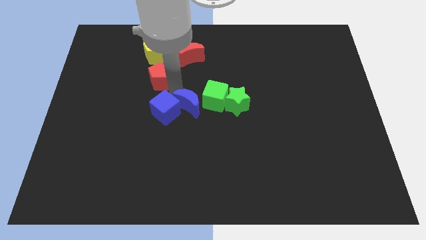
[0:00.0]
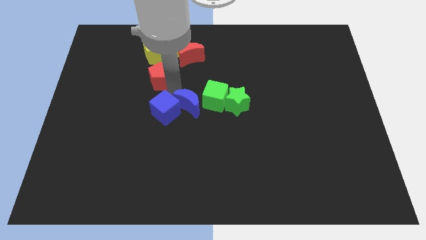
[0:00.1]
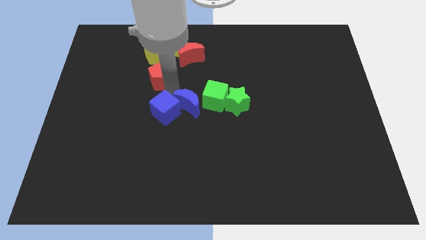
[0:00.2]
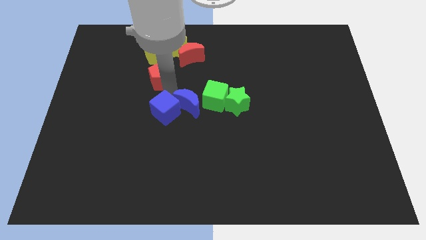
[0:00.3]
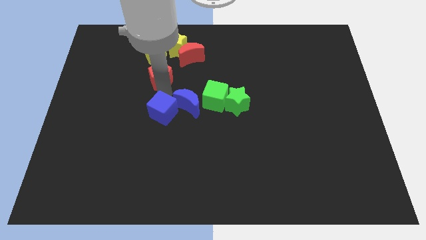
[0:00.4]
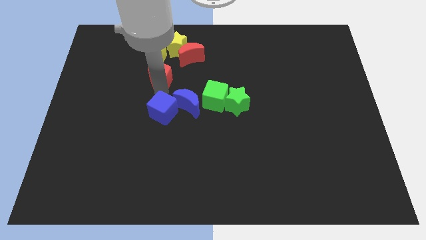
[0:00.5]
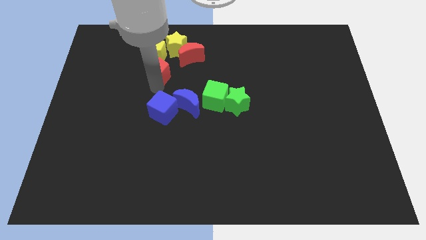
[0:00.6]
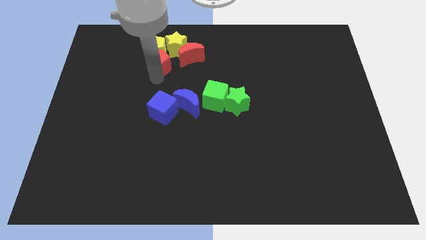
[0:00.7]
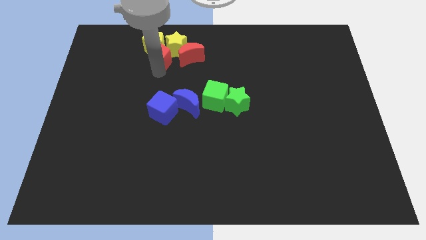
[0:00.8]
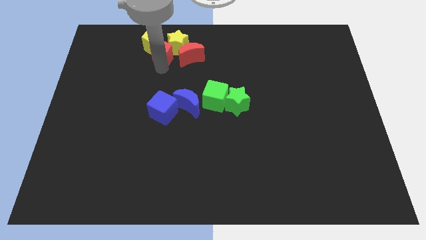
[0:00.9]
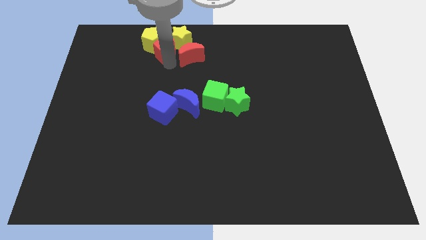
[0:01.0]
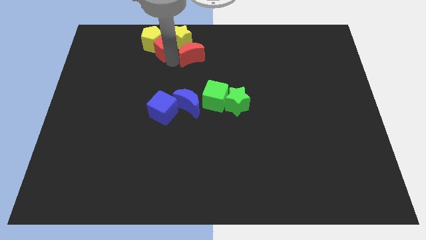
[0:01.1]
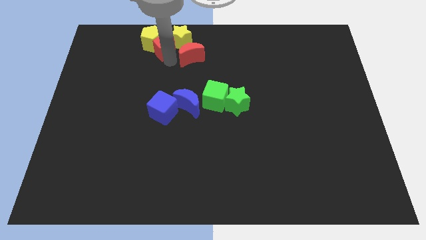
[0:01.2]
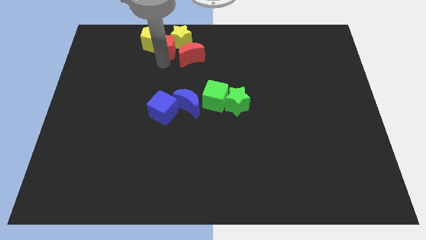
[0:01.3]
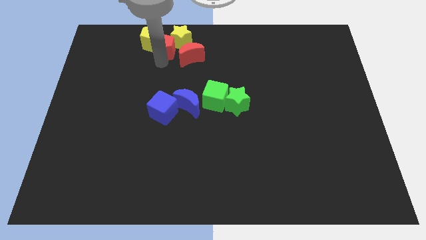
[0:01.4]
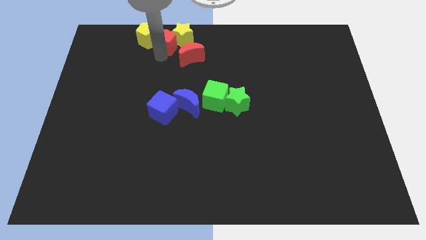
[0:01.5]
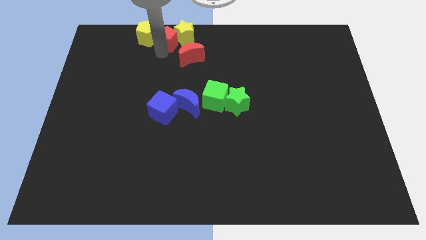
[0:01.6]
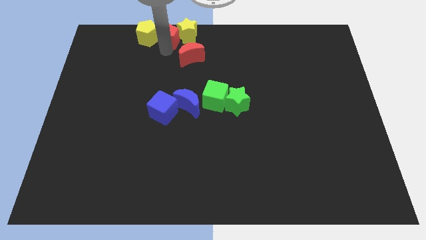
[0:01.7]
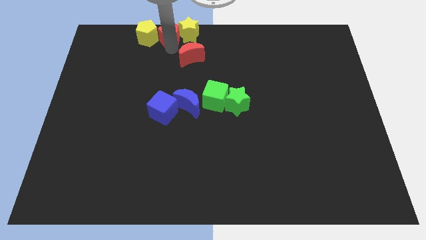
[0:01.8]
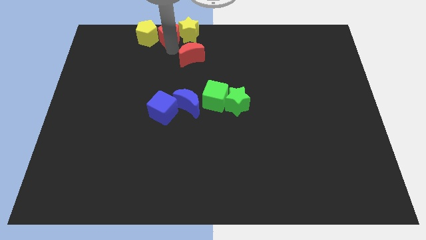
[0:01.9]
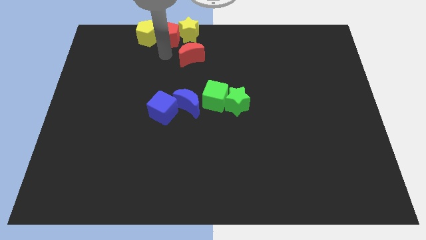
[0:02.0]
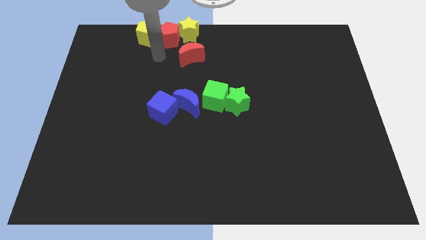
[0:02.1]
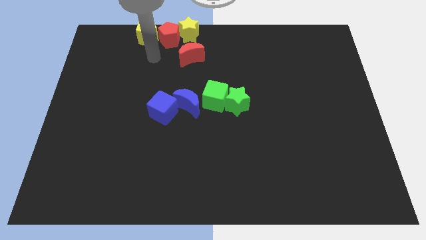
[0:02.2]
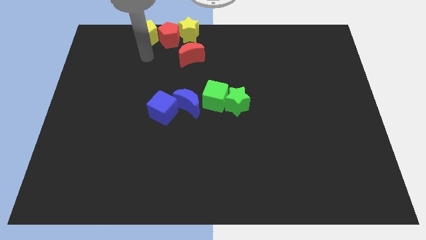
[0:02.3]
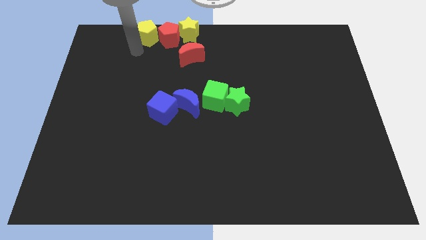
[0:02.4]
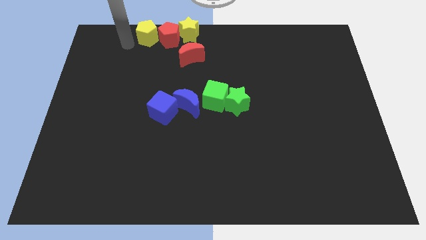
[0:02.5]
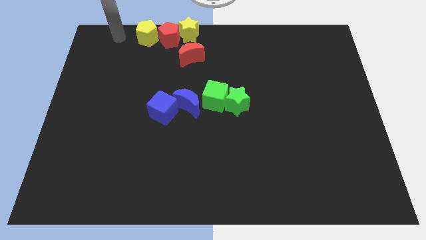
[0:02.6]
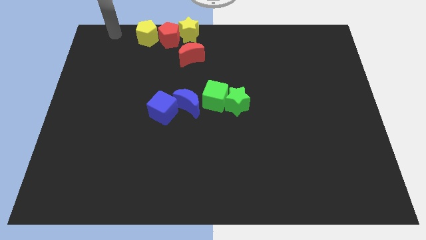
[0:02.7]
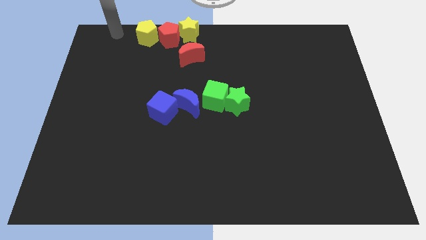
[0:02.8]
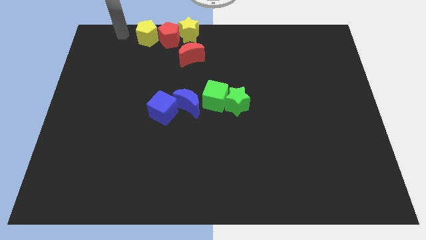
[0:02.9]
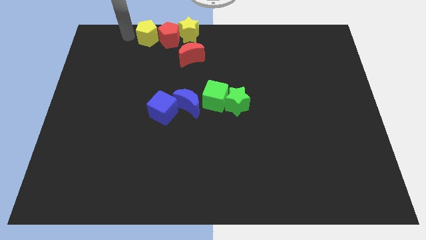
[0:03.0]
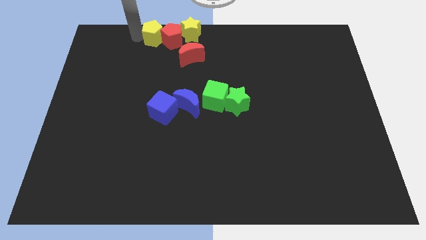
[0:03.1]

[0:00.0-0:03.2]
place the red pentagon in between the yellow star and the yellow pentagon

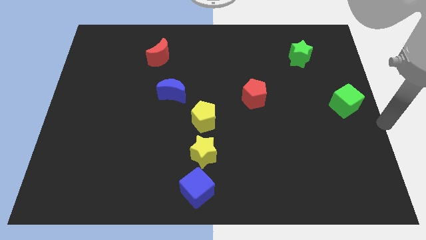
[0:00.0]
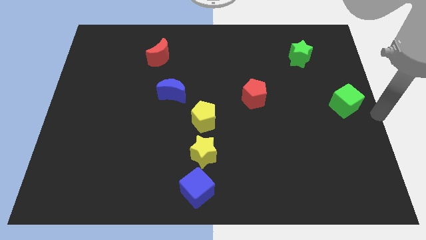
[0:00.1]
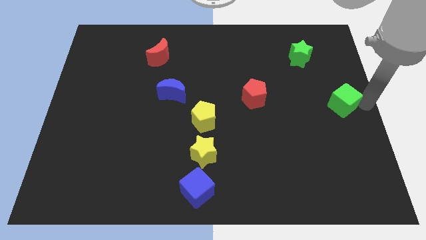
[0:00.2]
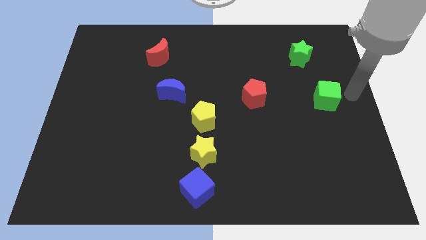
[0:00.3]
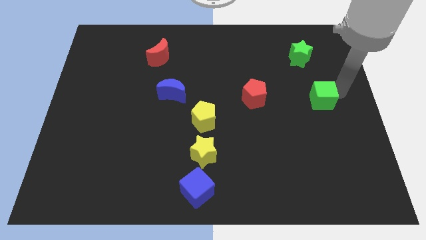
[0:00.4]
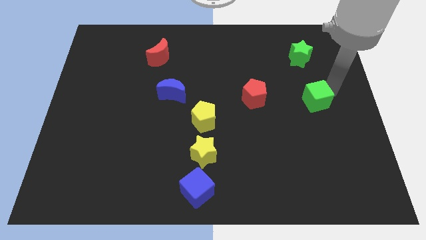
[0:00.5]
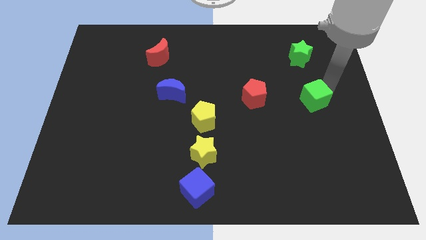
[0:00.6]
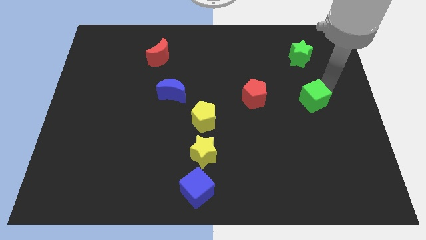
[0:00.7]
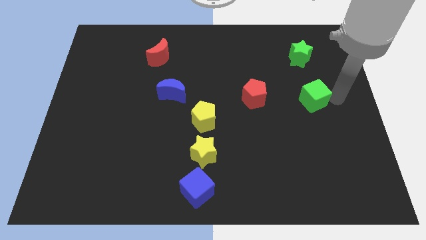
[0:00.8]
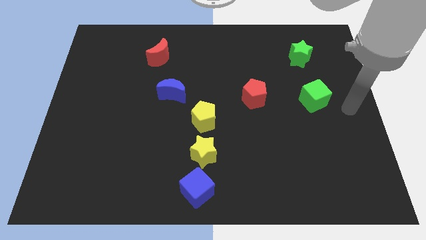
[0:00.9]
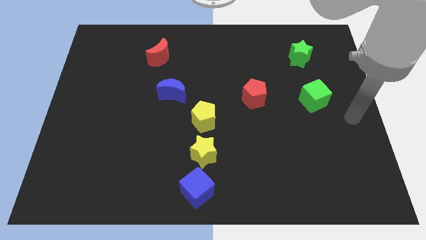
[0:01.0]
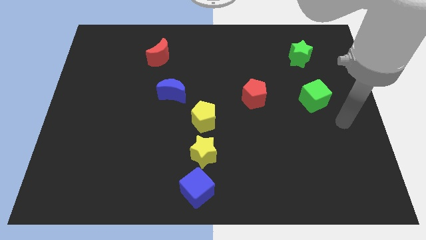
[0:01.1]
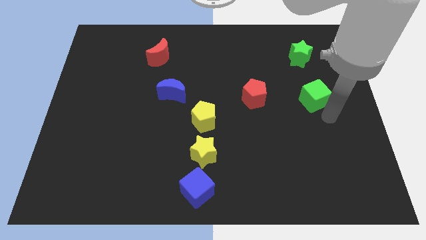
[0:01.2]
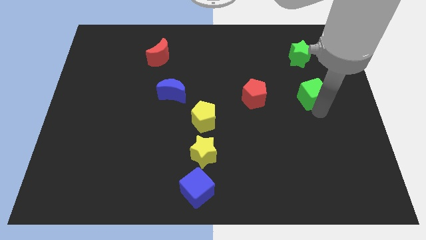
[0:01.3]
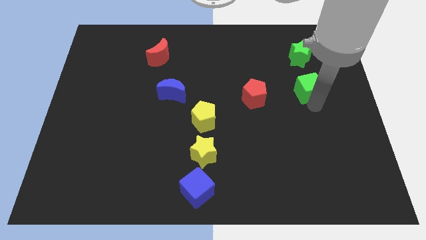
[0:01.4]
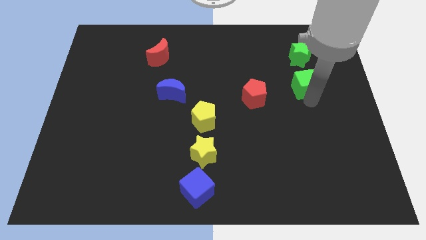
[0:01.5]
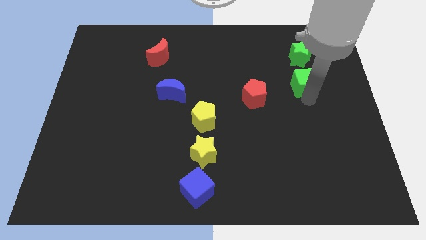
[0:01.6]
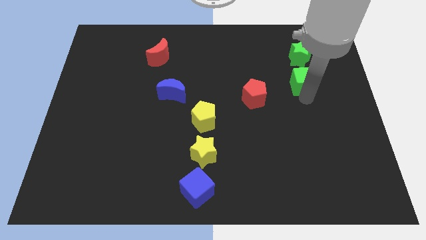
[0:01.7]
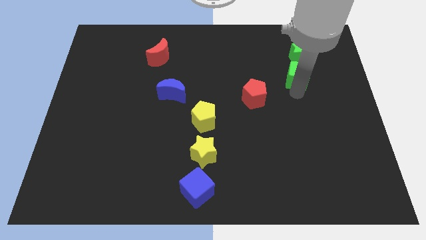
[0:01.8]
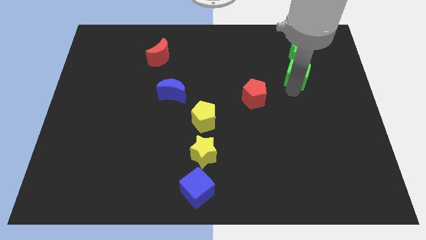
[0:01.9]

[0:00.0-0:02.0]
place the green cube below the green star

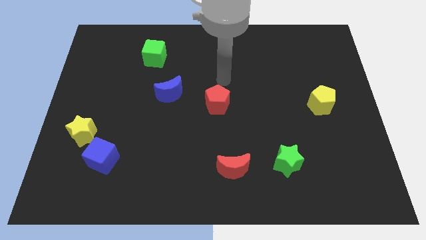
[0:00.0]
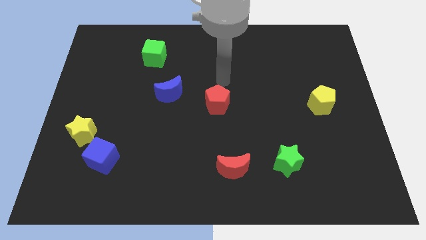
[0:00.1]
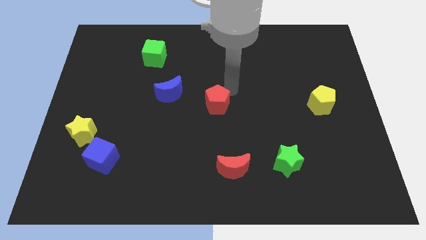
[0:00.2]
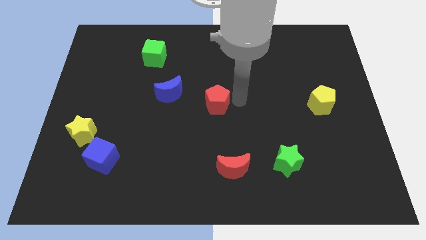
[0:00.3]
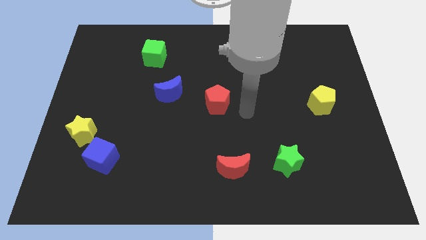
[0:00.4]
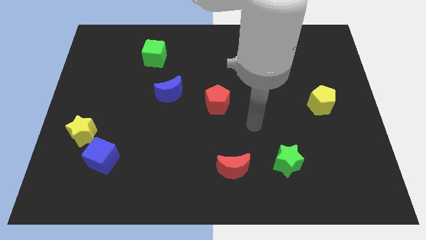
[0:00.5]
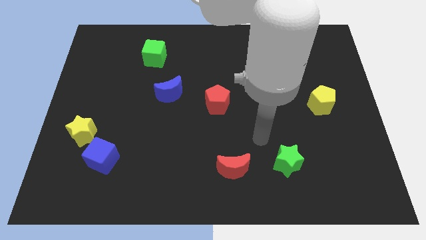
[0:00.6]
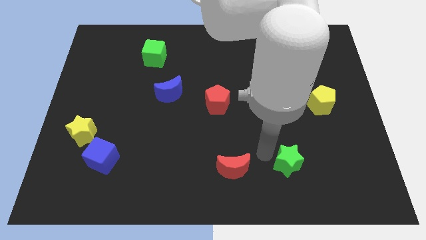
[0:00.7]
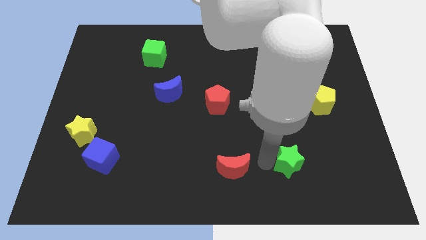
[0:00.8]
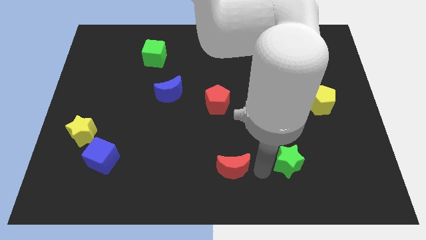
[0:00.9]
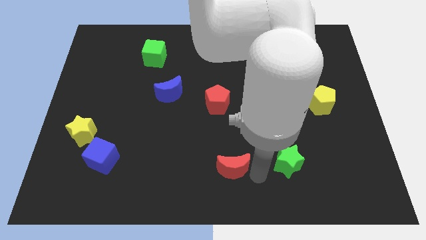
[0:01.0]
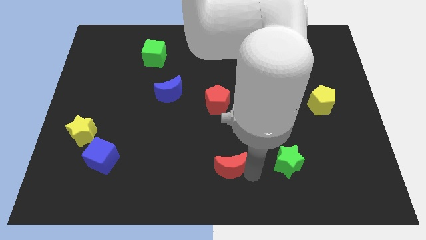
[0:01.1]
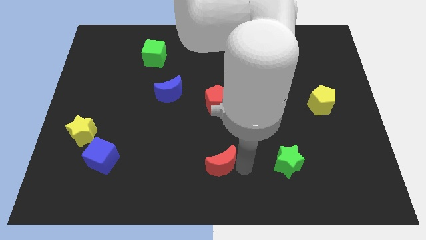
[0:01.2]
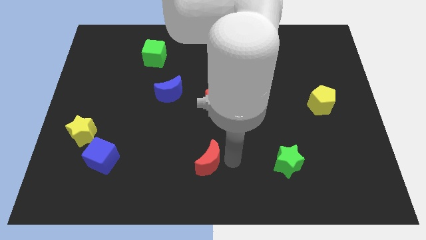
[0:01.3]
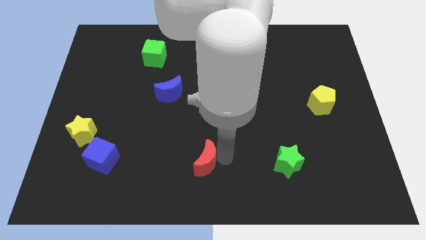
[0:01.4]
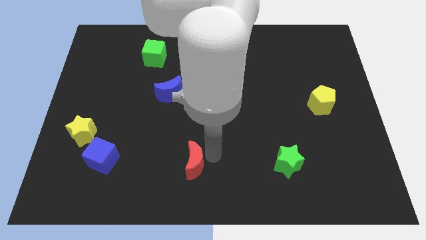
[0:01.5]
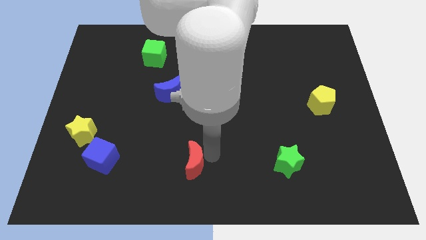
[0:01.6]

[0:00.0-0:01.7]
push the red moon slightly to the left

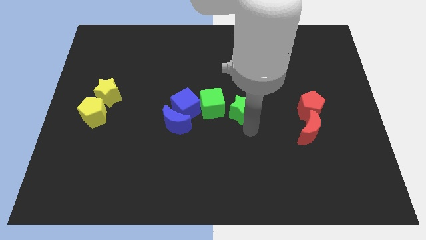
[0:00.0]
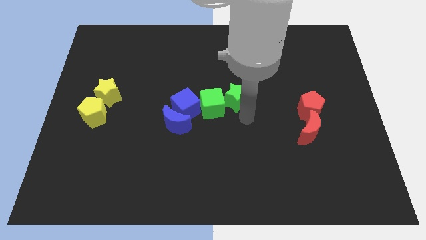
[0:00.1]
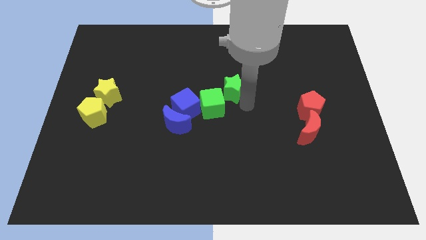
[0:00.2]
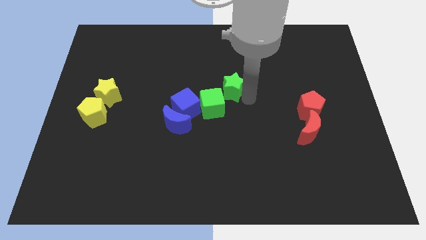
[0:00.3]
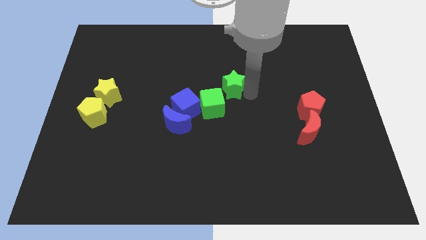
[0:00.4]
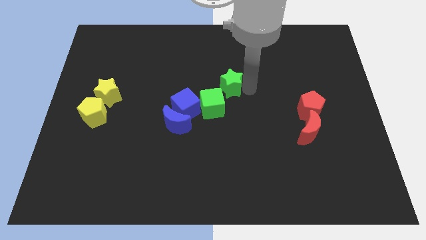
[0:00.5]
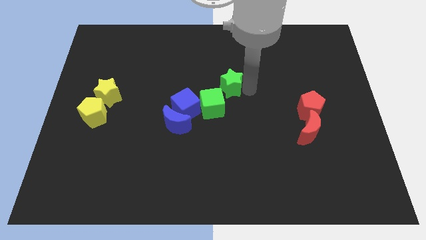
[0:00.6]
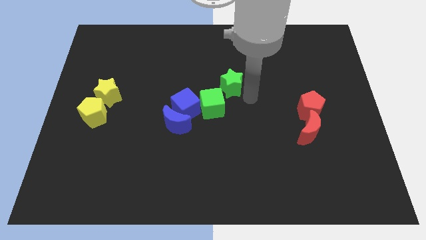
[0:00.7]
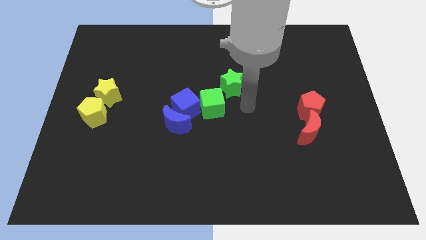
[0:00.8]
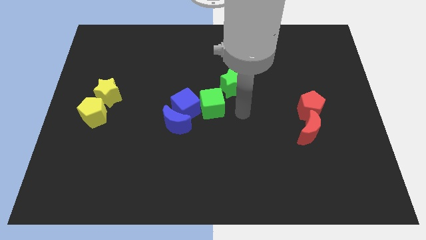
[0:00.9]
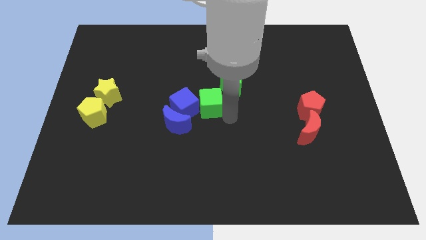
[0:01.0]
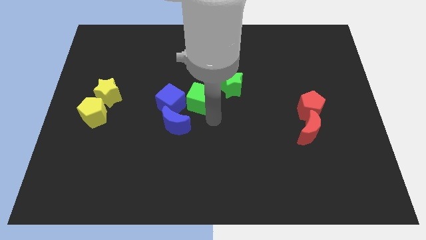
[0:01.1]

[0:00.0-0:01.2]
move the green star diagonally to the top right of the green cube

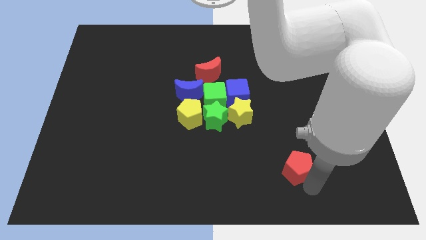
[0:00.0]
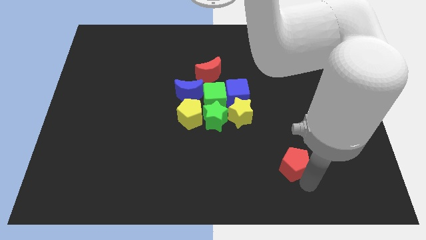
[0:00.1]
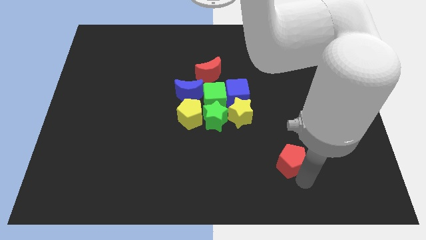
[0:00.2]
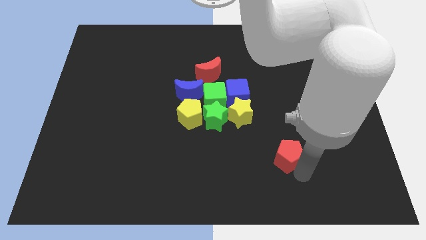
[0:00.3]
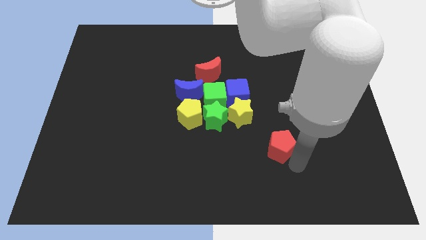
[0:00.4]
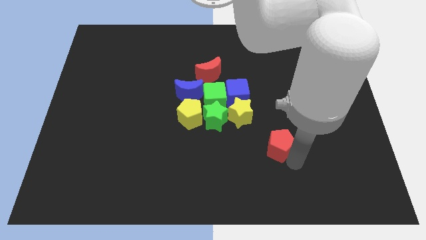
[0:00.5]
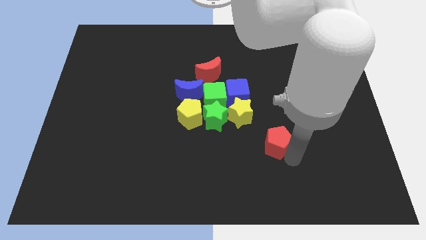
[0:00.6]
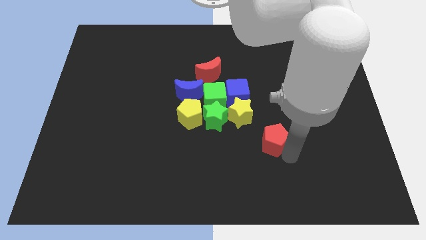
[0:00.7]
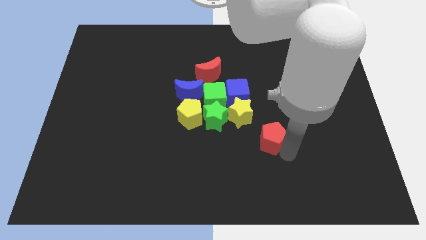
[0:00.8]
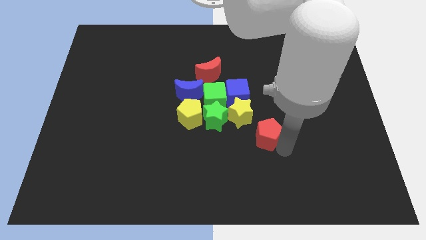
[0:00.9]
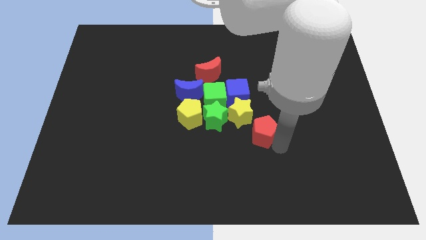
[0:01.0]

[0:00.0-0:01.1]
move the red pentagon diagonal to the yellow star
